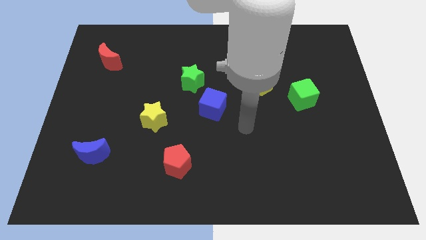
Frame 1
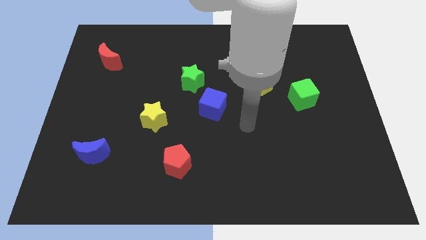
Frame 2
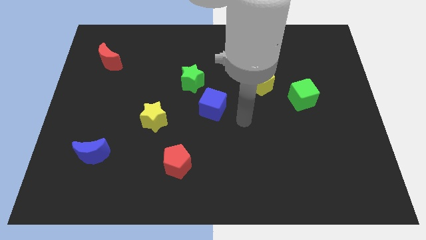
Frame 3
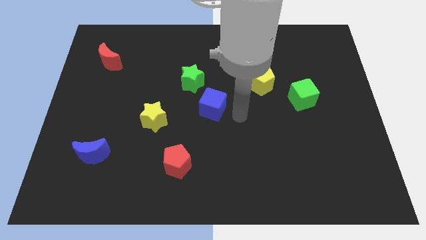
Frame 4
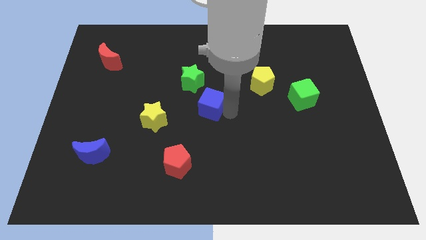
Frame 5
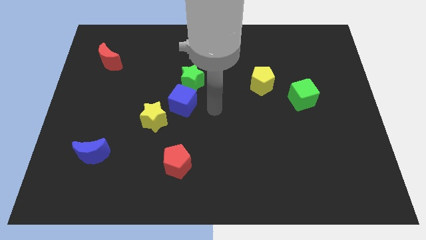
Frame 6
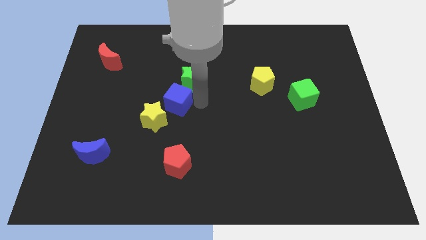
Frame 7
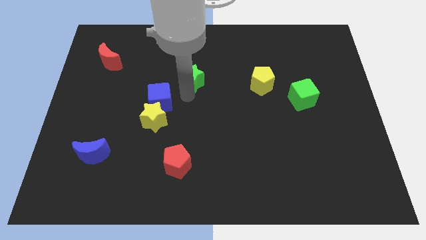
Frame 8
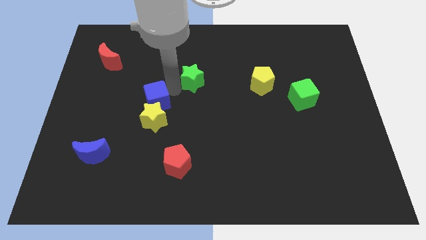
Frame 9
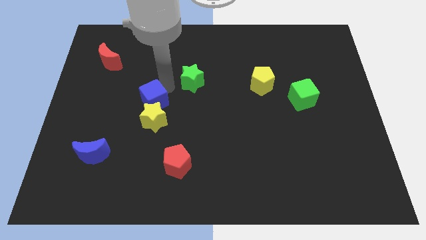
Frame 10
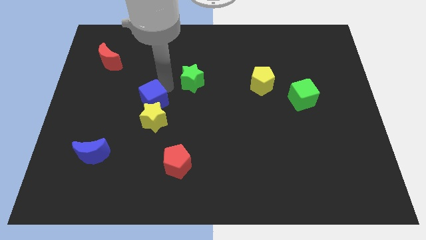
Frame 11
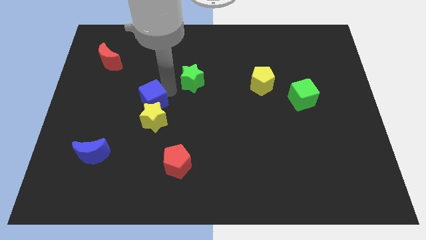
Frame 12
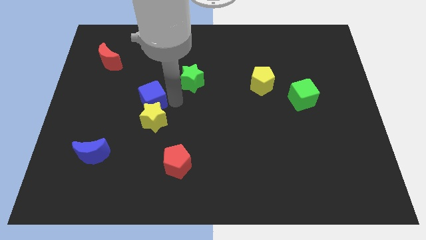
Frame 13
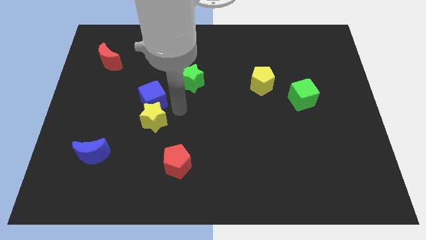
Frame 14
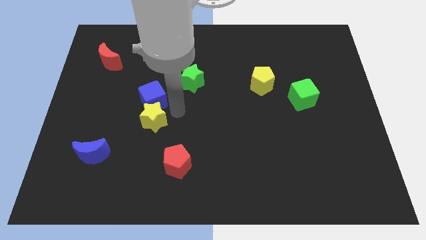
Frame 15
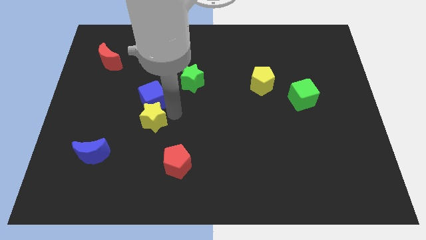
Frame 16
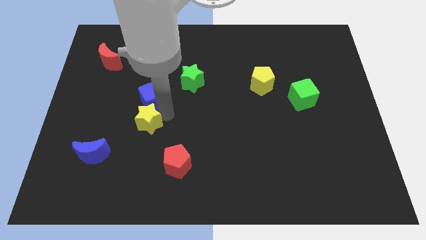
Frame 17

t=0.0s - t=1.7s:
slide the blue cube diagonally bottom left to the green star

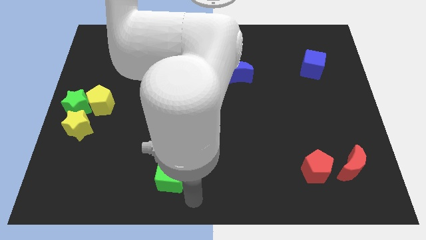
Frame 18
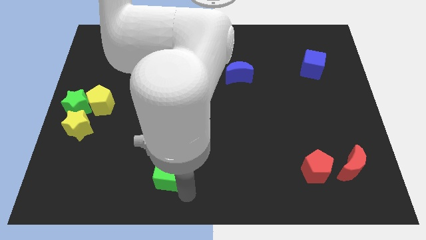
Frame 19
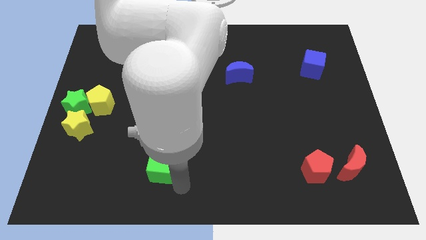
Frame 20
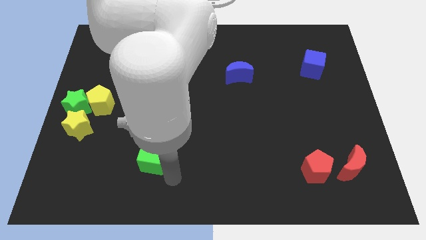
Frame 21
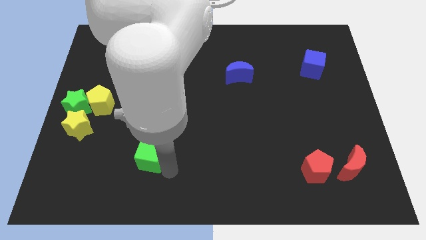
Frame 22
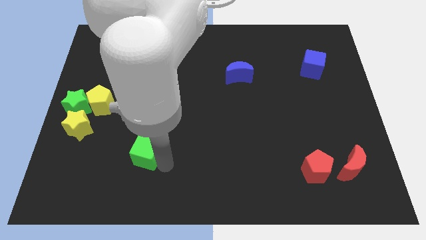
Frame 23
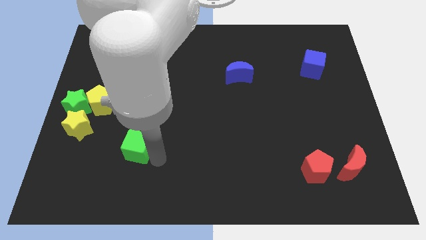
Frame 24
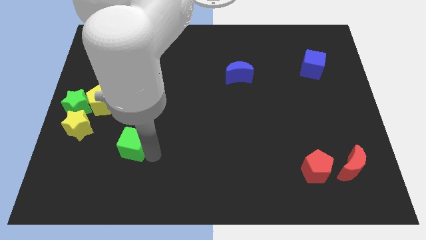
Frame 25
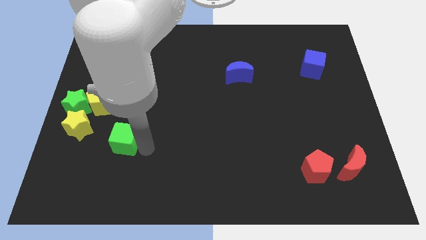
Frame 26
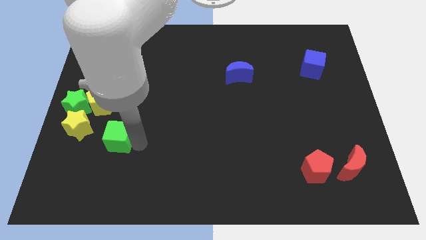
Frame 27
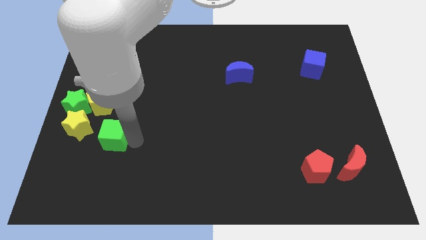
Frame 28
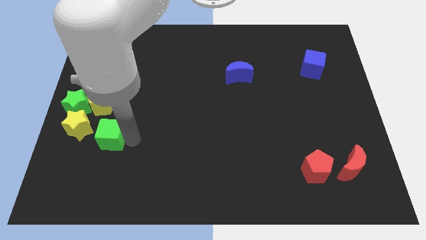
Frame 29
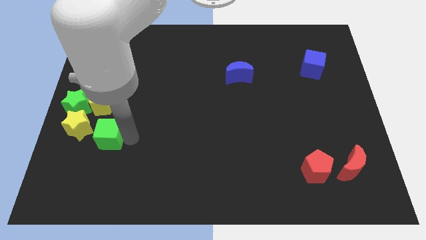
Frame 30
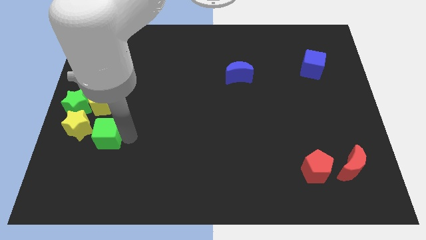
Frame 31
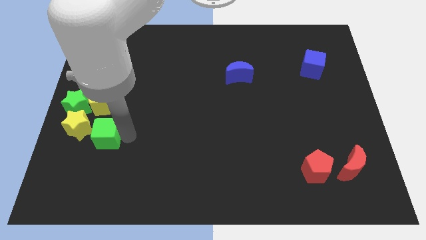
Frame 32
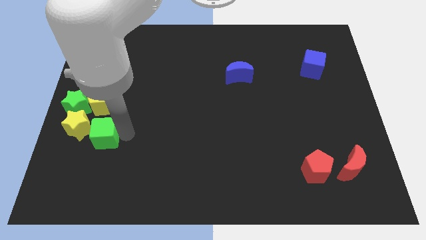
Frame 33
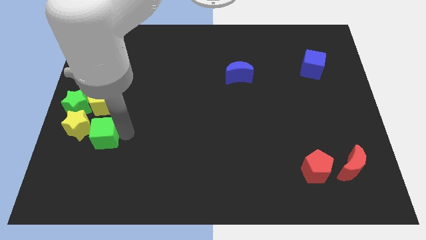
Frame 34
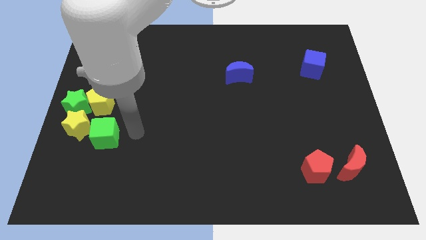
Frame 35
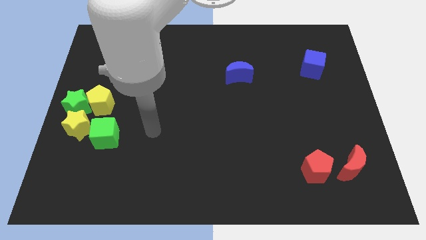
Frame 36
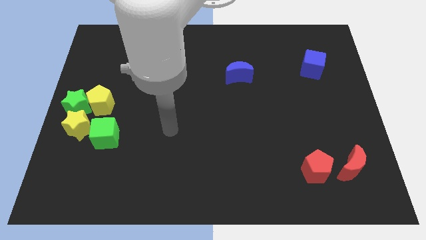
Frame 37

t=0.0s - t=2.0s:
place green cube to the right of yellow star

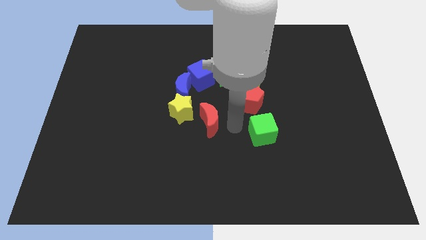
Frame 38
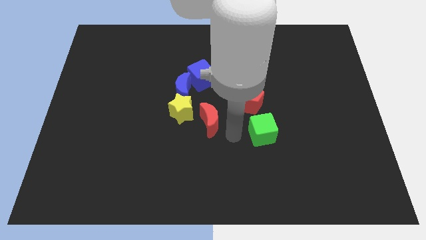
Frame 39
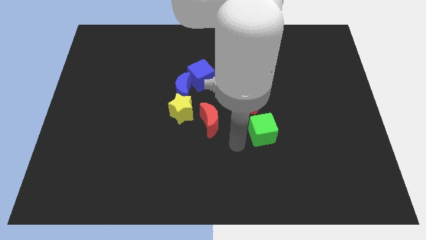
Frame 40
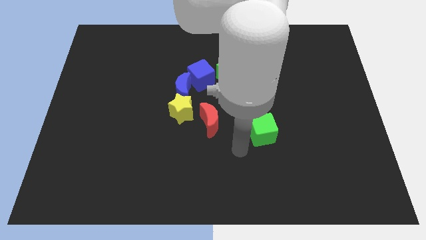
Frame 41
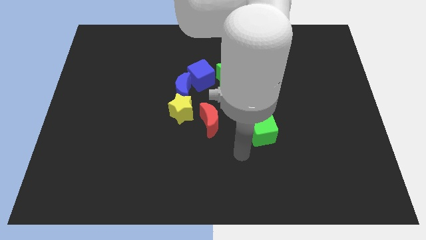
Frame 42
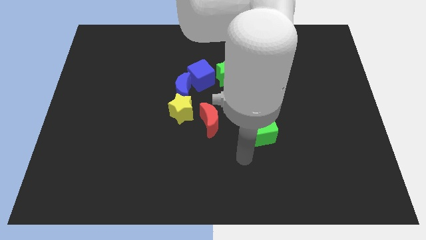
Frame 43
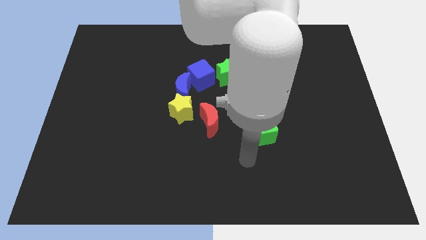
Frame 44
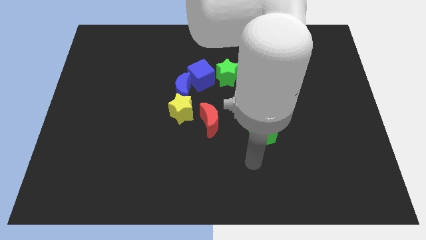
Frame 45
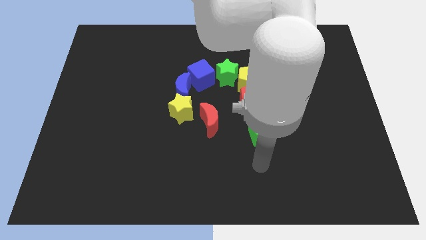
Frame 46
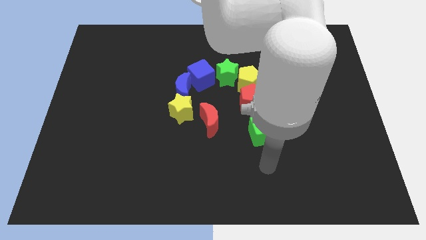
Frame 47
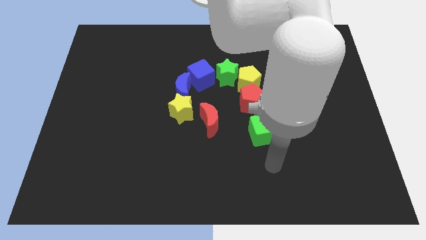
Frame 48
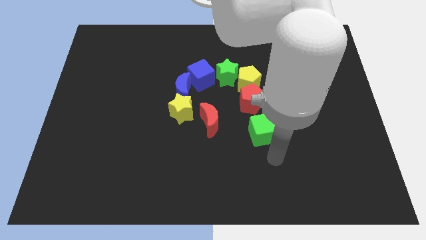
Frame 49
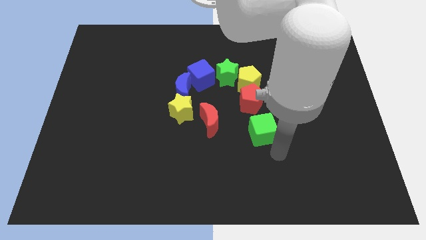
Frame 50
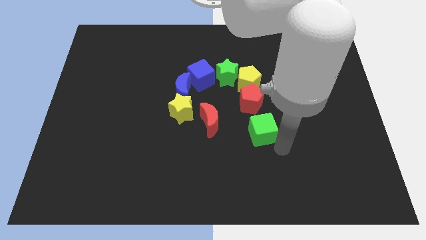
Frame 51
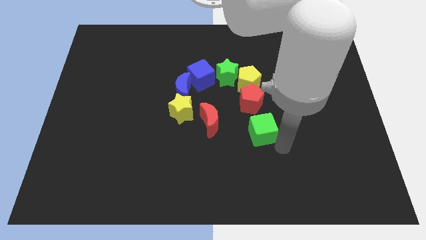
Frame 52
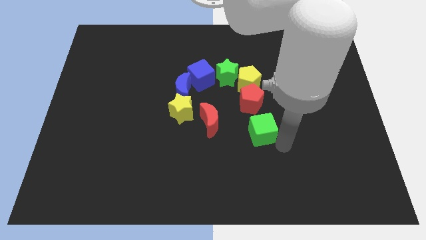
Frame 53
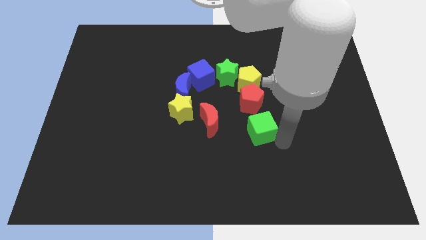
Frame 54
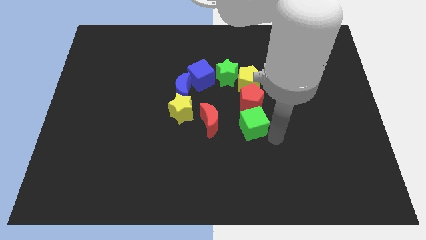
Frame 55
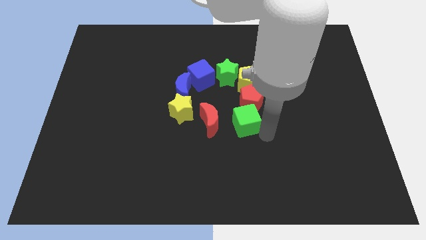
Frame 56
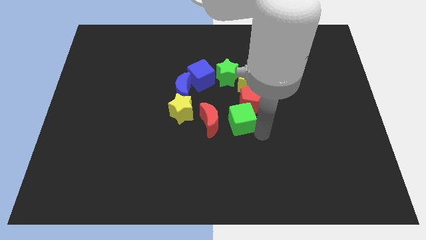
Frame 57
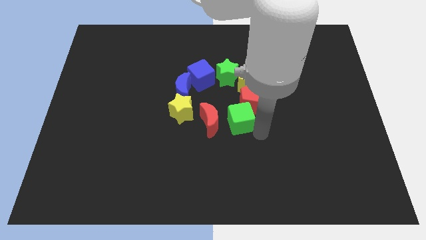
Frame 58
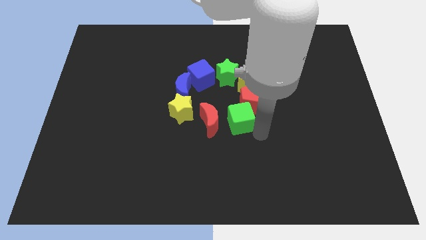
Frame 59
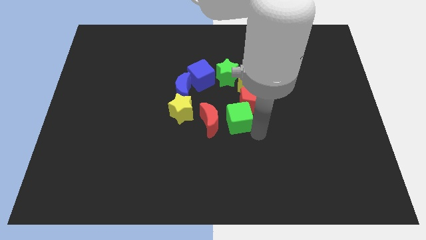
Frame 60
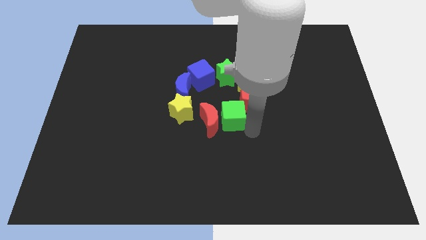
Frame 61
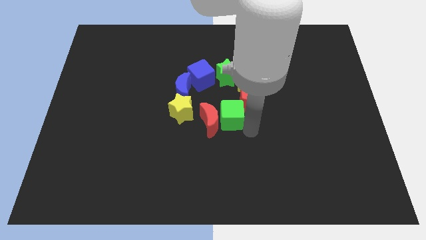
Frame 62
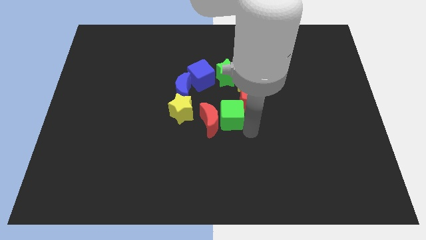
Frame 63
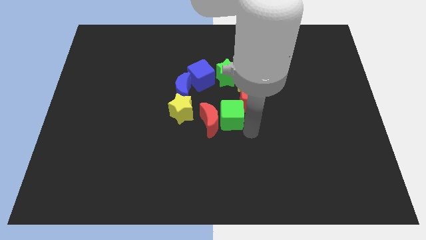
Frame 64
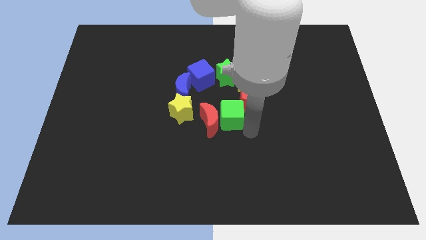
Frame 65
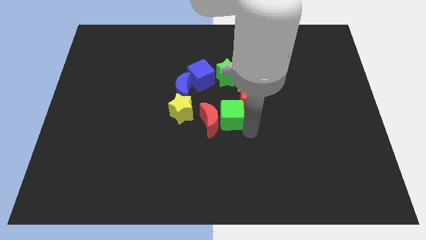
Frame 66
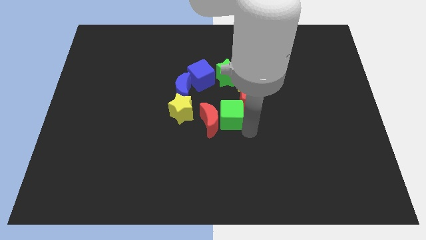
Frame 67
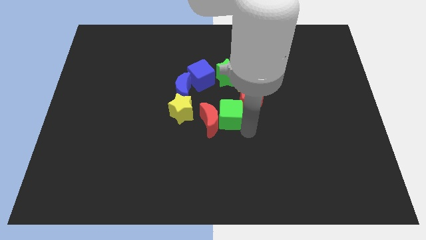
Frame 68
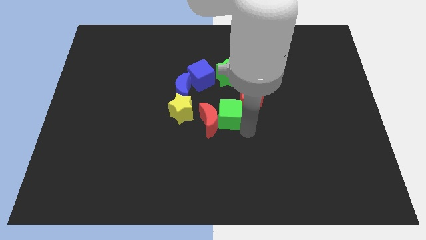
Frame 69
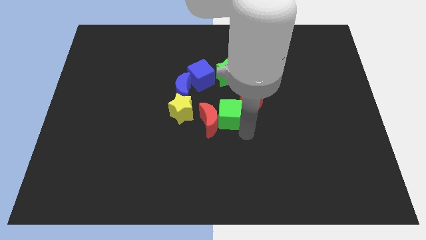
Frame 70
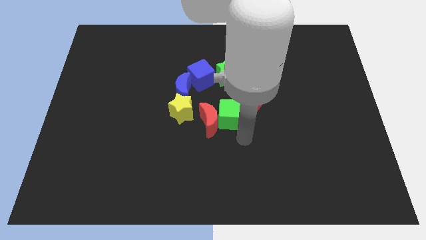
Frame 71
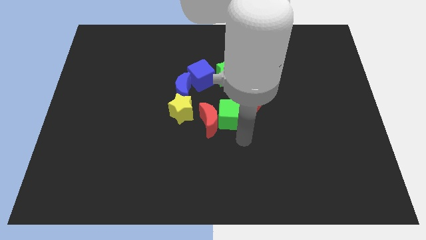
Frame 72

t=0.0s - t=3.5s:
place the green cube down to the green star

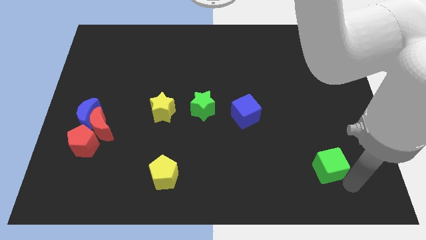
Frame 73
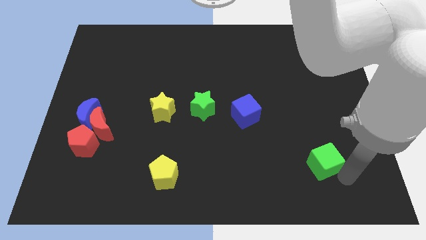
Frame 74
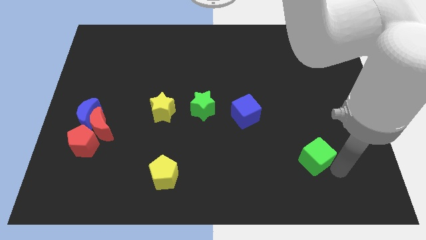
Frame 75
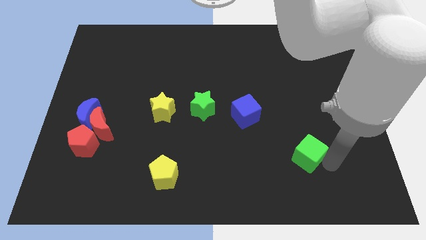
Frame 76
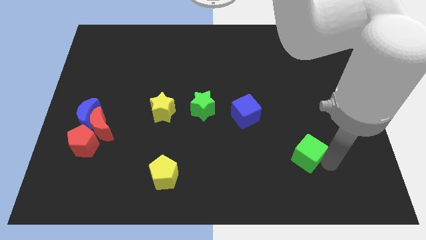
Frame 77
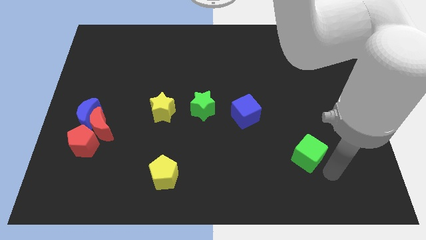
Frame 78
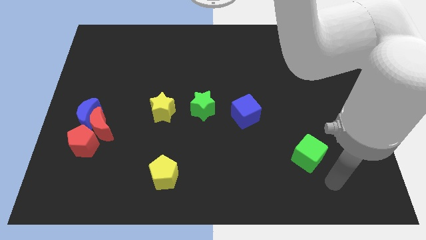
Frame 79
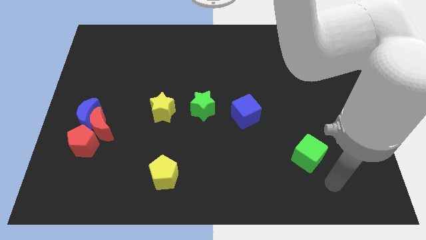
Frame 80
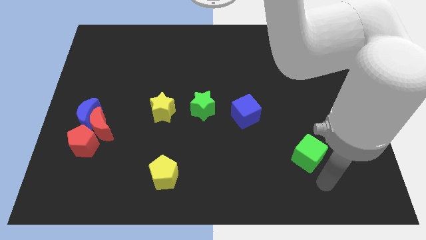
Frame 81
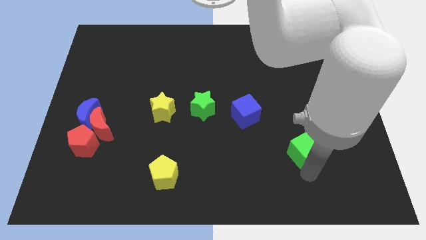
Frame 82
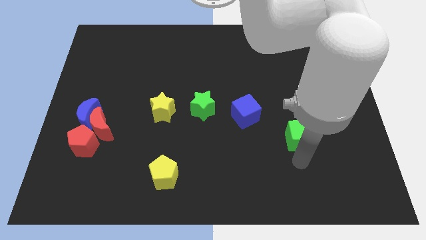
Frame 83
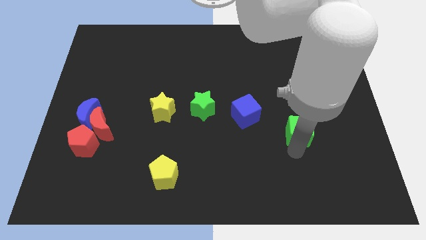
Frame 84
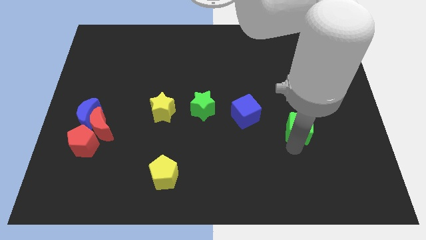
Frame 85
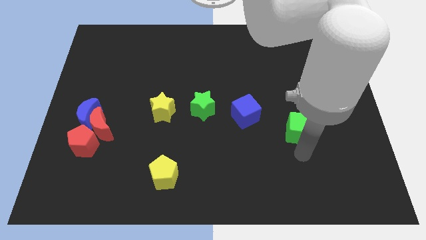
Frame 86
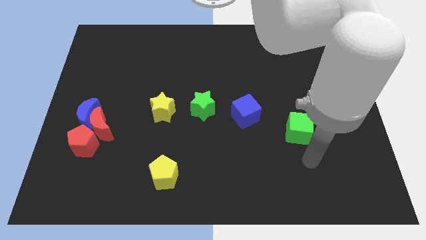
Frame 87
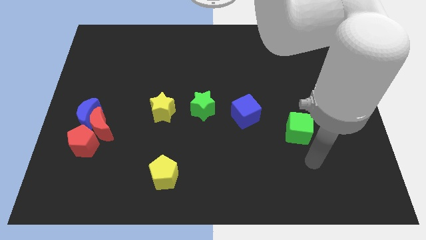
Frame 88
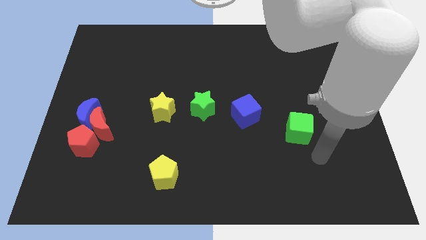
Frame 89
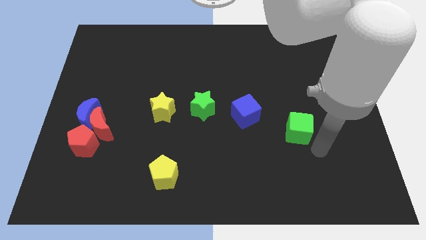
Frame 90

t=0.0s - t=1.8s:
move the green cube diagonally below to the blue cube
